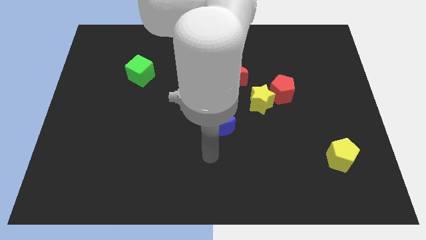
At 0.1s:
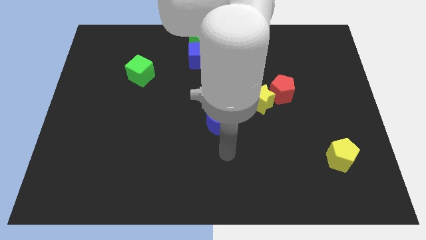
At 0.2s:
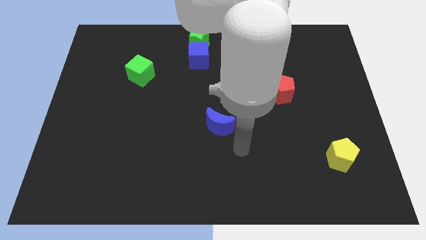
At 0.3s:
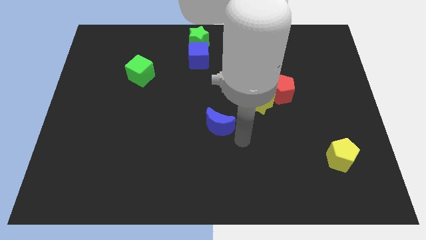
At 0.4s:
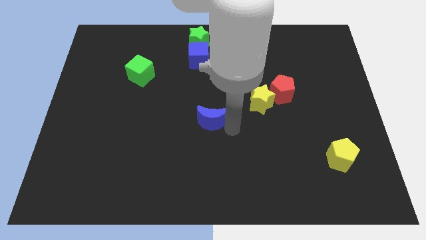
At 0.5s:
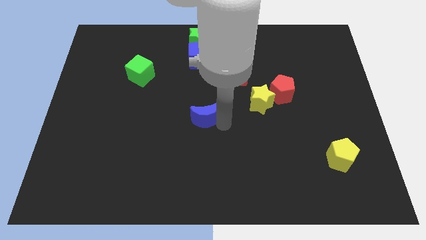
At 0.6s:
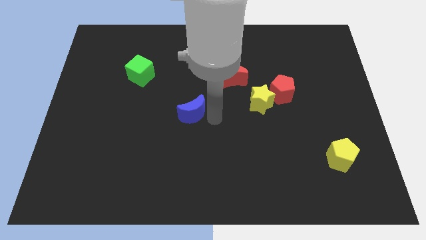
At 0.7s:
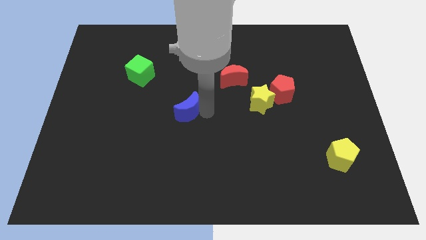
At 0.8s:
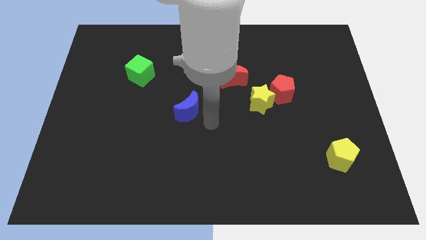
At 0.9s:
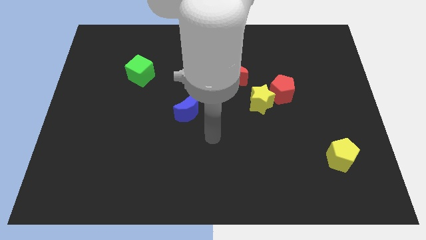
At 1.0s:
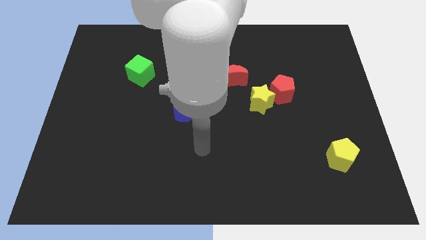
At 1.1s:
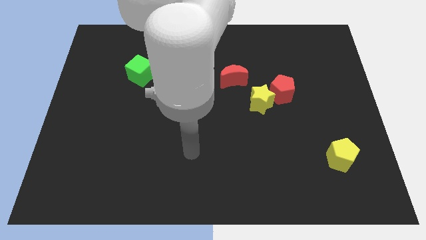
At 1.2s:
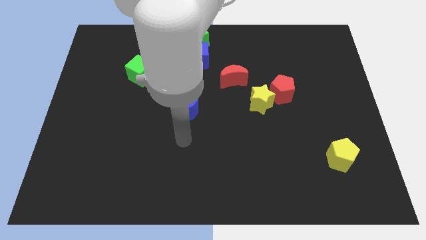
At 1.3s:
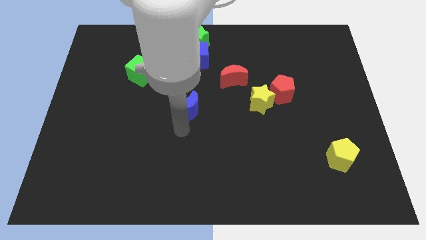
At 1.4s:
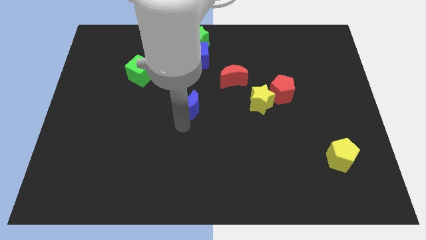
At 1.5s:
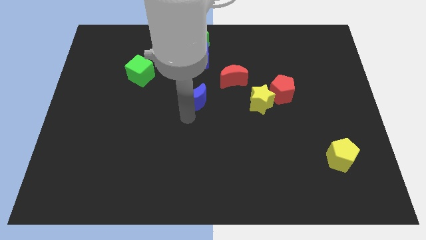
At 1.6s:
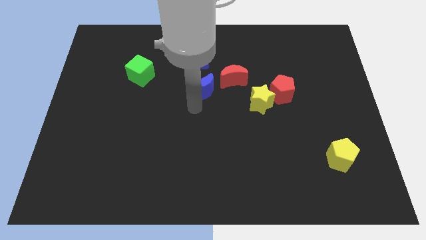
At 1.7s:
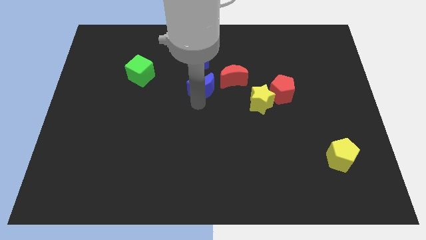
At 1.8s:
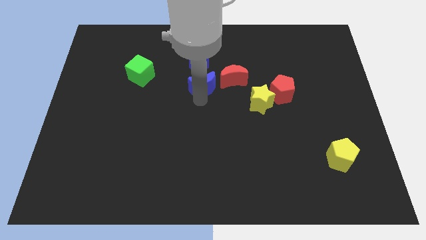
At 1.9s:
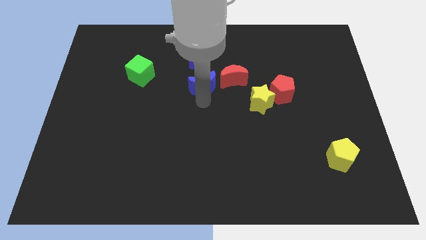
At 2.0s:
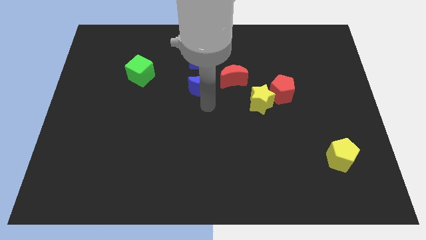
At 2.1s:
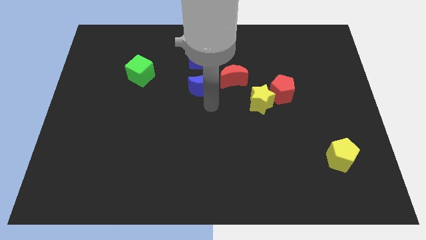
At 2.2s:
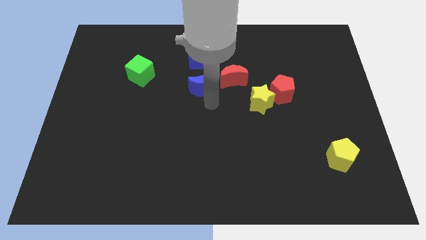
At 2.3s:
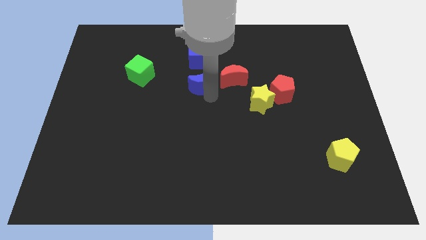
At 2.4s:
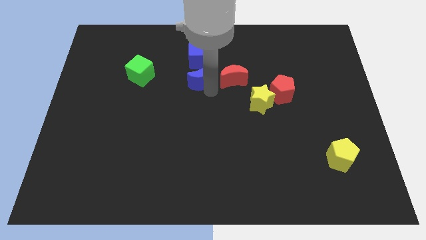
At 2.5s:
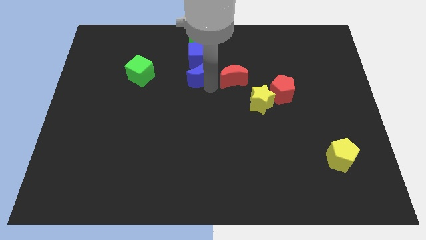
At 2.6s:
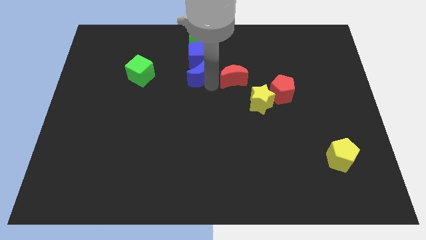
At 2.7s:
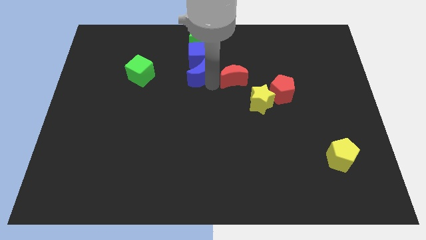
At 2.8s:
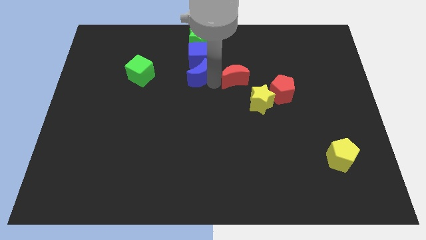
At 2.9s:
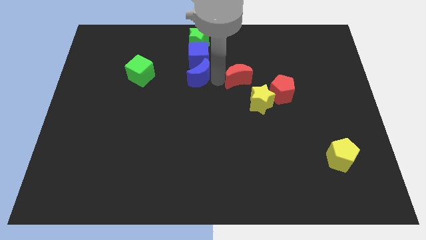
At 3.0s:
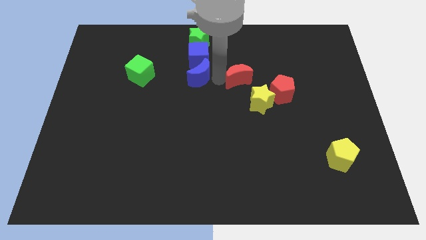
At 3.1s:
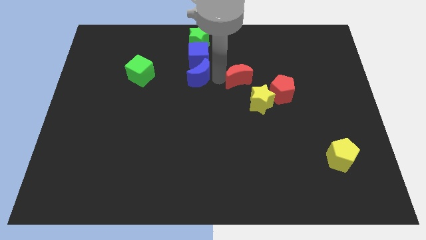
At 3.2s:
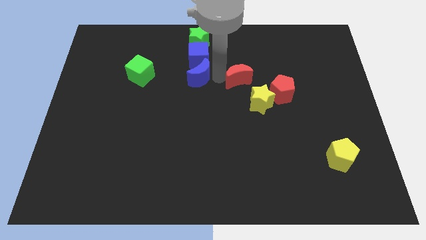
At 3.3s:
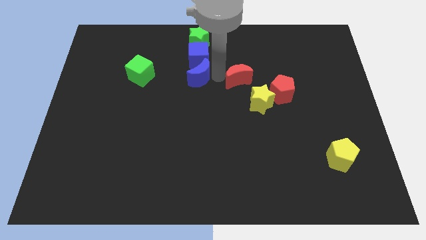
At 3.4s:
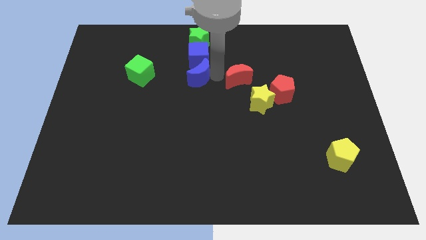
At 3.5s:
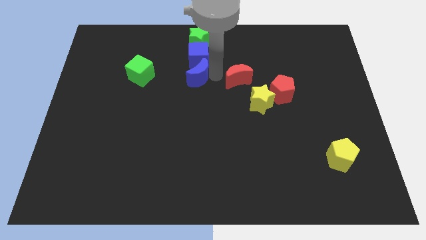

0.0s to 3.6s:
place blue crescent at the bottom of blue cube

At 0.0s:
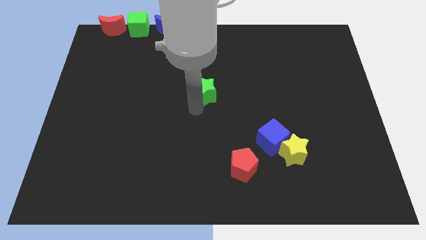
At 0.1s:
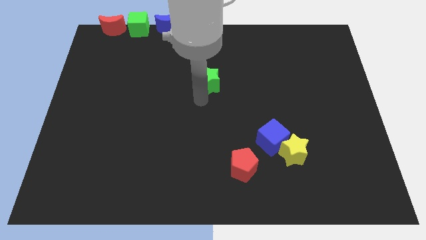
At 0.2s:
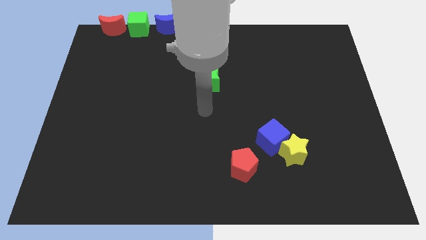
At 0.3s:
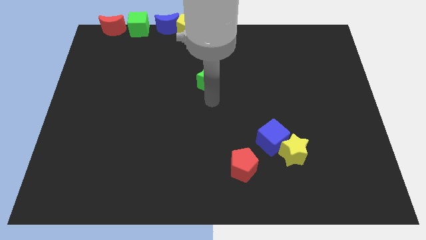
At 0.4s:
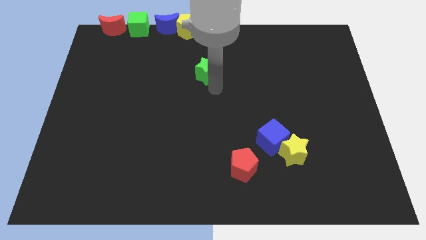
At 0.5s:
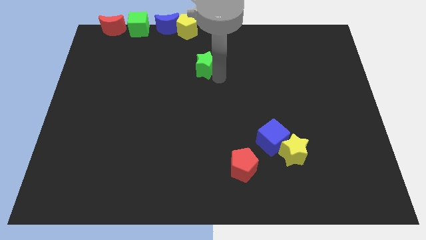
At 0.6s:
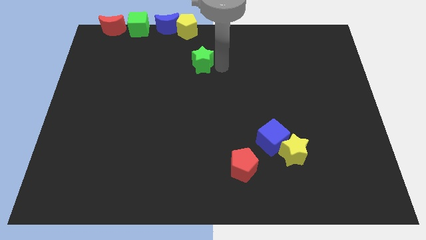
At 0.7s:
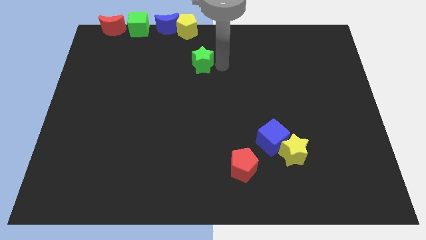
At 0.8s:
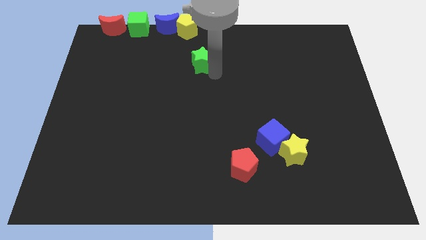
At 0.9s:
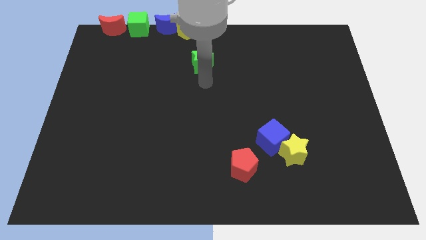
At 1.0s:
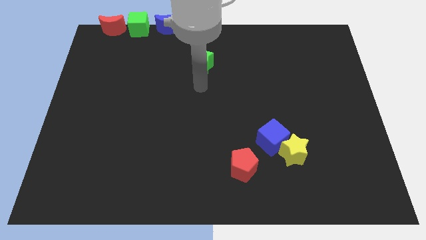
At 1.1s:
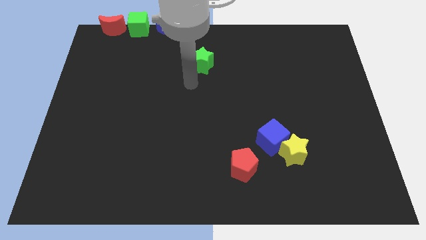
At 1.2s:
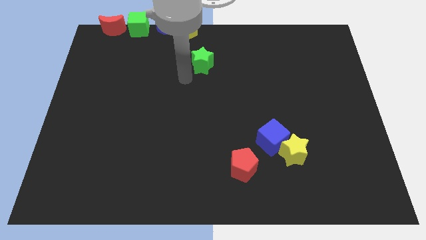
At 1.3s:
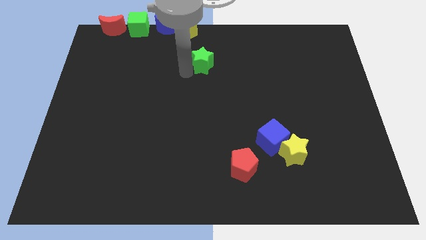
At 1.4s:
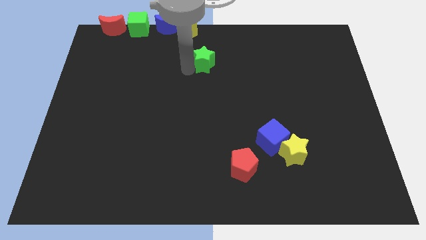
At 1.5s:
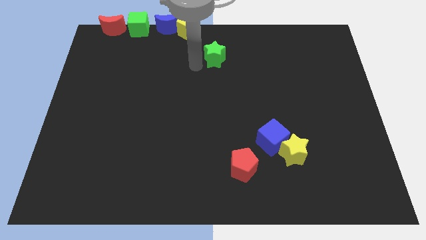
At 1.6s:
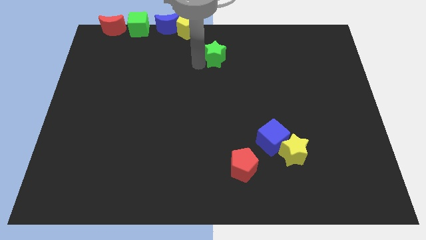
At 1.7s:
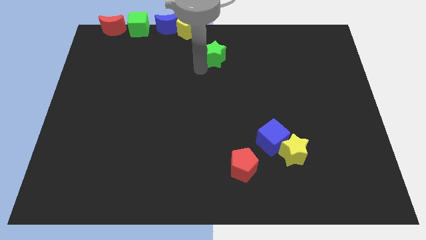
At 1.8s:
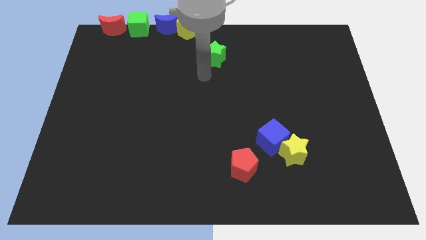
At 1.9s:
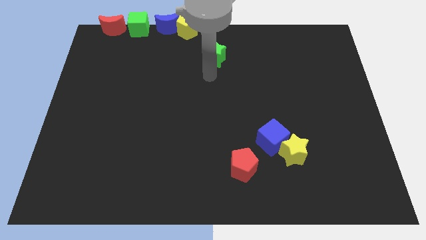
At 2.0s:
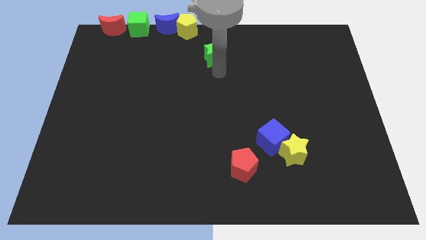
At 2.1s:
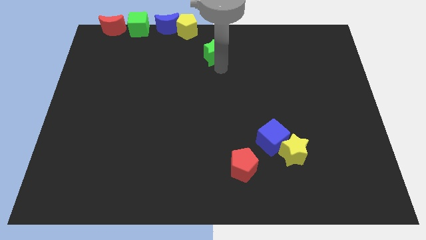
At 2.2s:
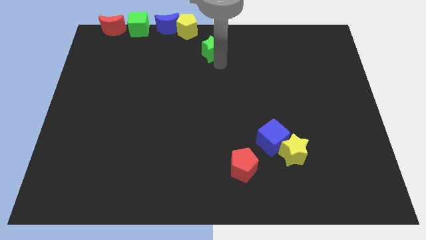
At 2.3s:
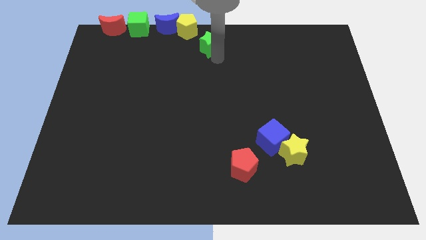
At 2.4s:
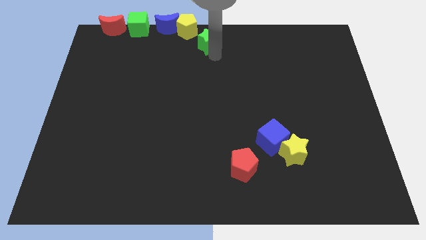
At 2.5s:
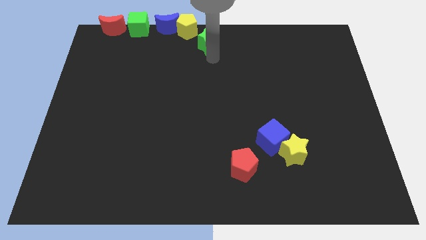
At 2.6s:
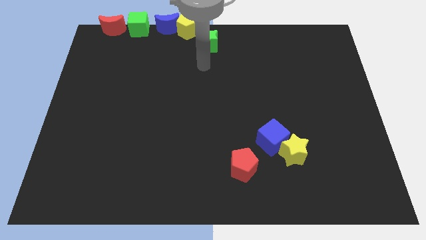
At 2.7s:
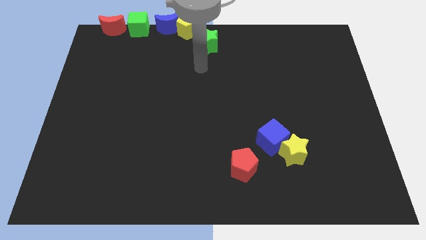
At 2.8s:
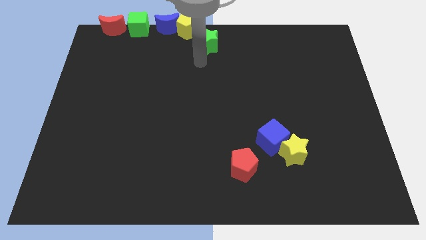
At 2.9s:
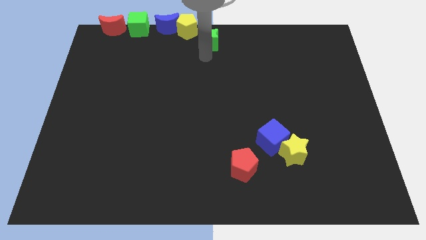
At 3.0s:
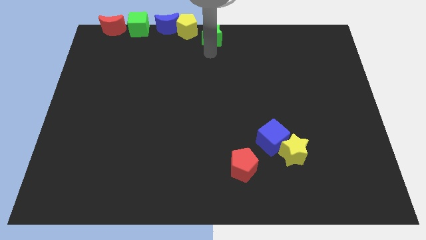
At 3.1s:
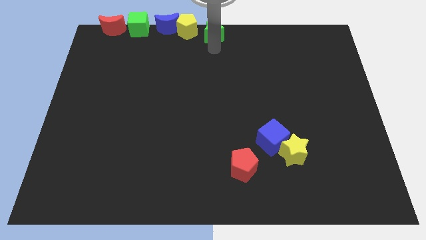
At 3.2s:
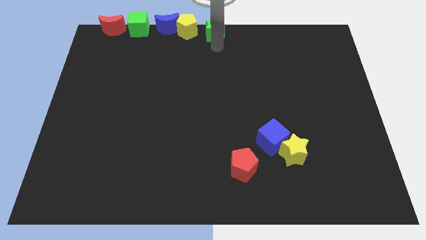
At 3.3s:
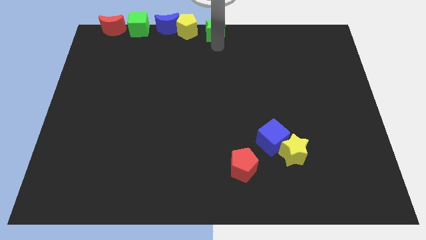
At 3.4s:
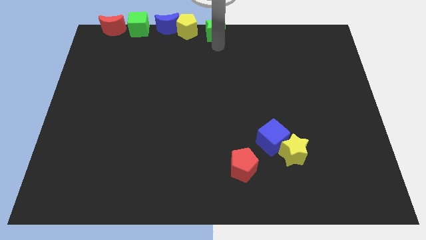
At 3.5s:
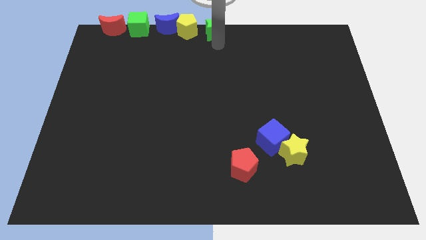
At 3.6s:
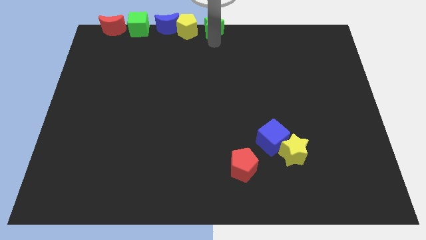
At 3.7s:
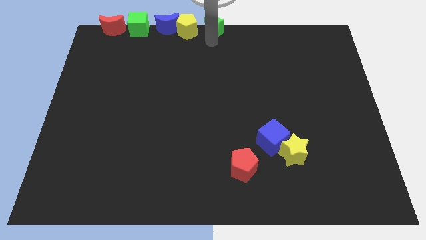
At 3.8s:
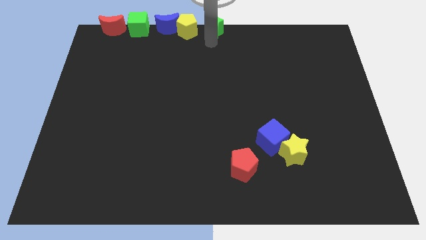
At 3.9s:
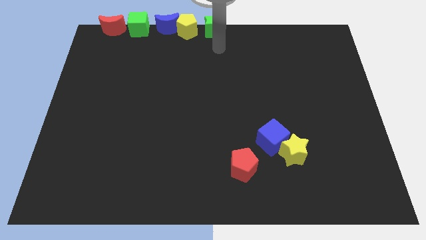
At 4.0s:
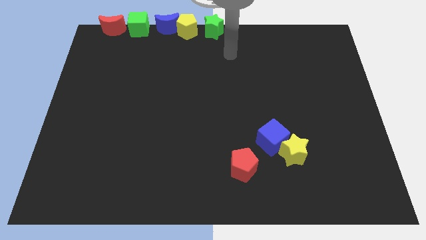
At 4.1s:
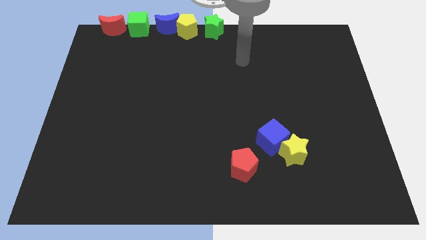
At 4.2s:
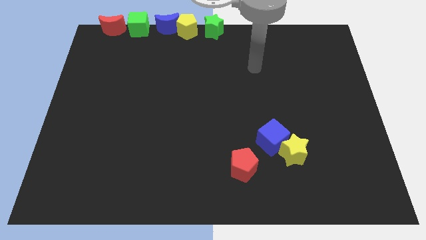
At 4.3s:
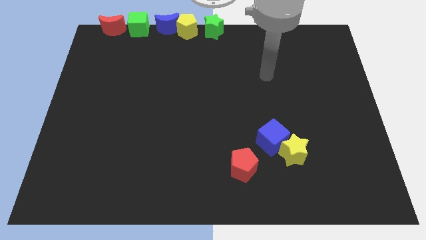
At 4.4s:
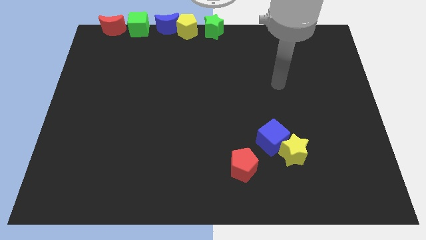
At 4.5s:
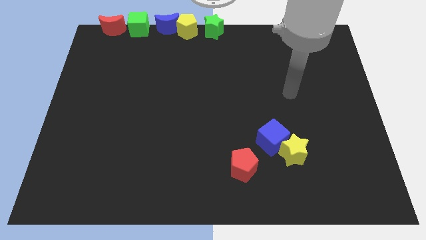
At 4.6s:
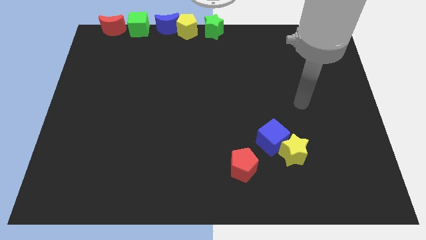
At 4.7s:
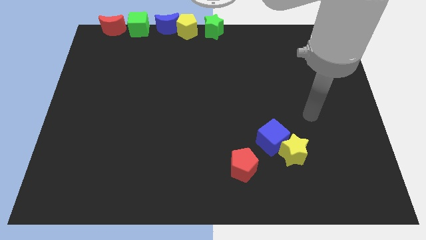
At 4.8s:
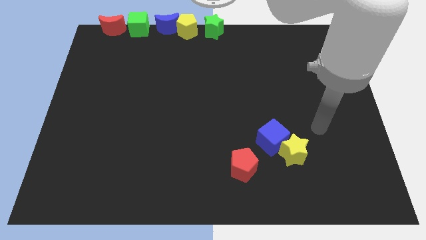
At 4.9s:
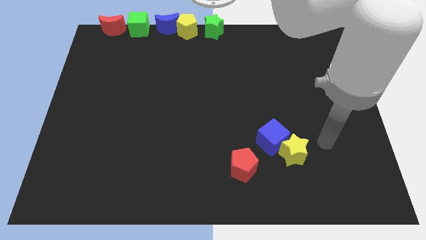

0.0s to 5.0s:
place the green star adjacent to the green star

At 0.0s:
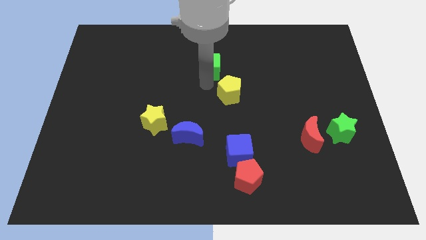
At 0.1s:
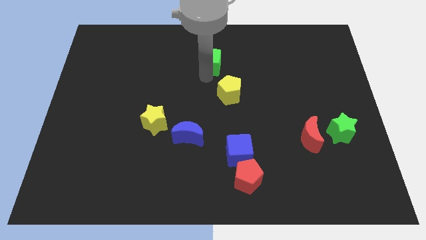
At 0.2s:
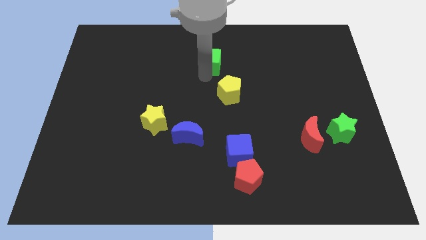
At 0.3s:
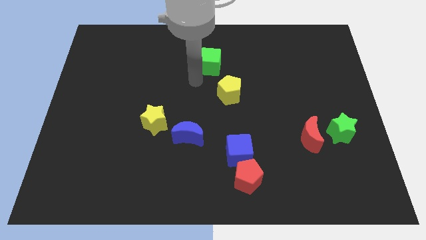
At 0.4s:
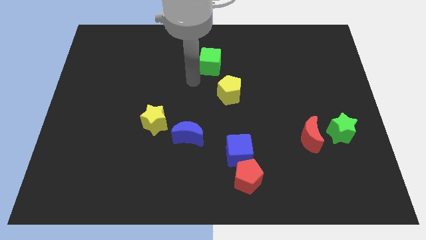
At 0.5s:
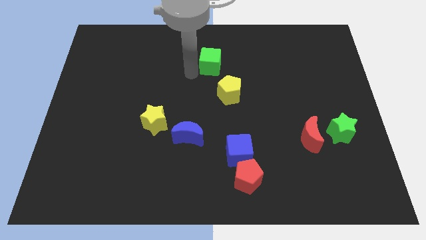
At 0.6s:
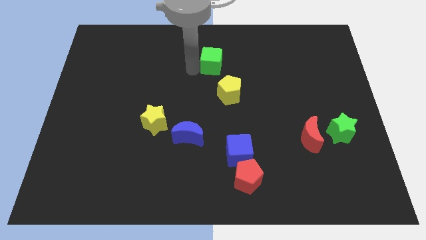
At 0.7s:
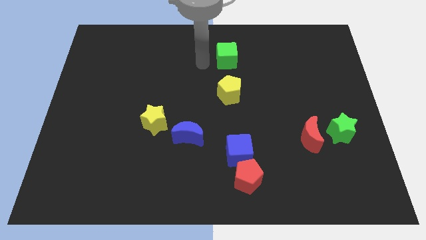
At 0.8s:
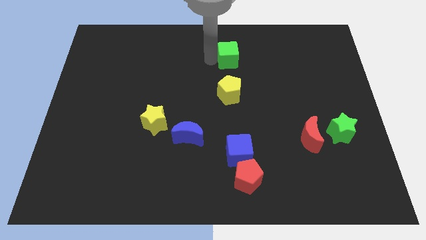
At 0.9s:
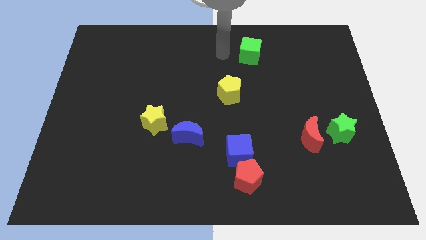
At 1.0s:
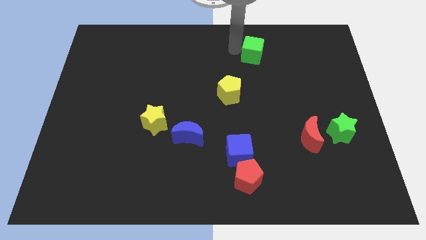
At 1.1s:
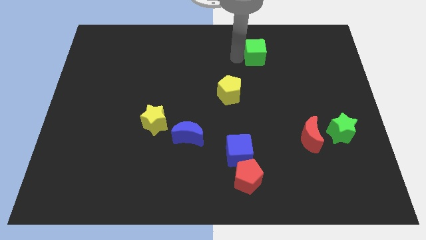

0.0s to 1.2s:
move the green cube to the right of the board
